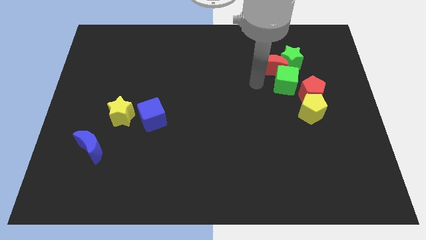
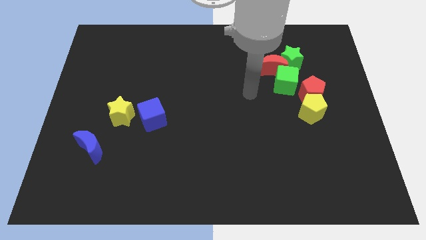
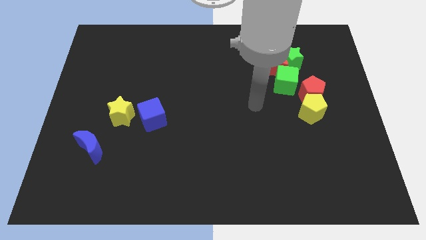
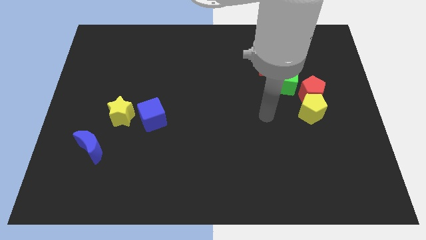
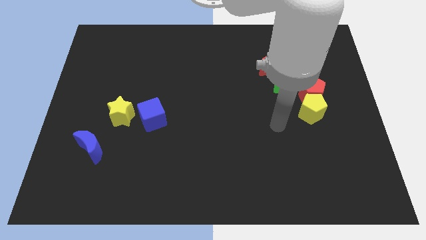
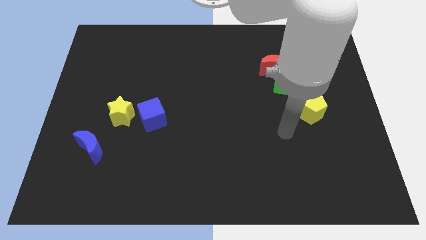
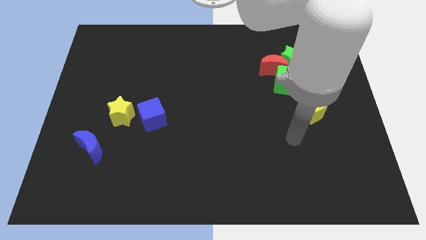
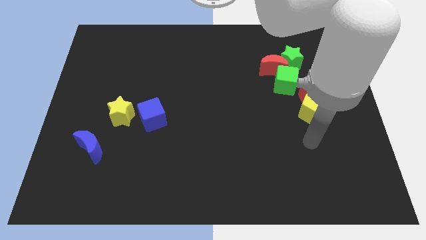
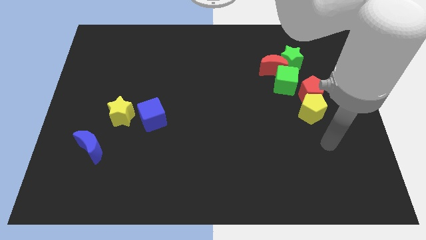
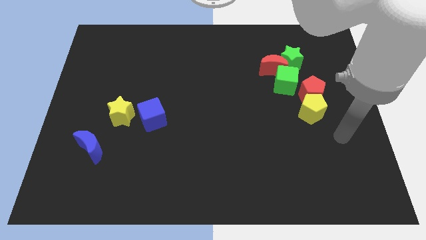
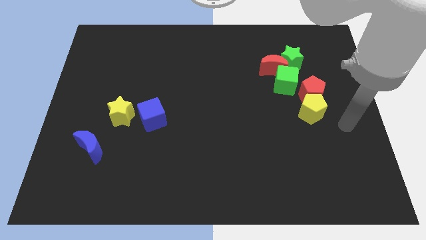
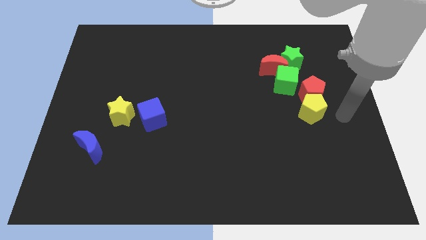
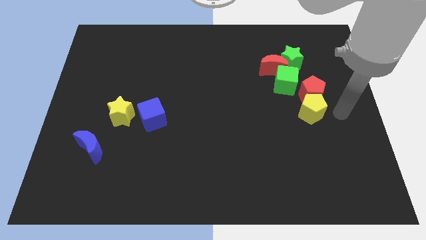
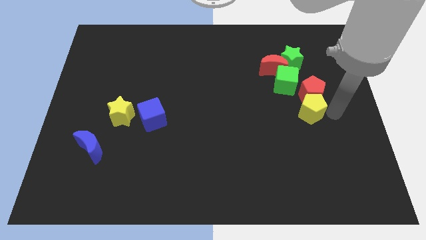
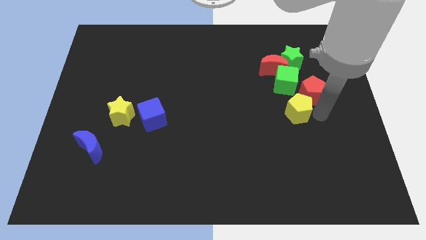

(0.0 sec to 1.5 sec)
place the arm to the right of the yellow pentagon

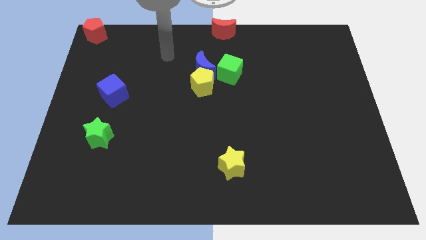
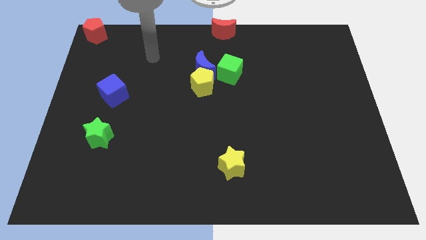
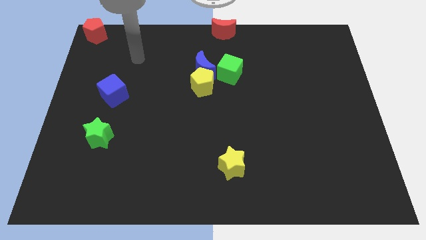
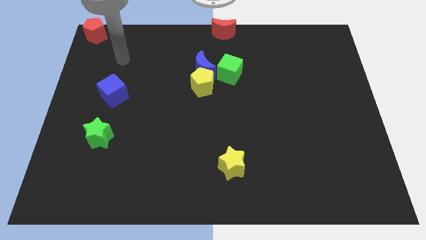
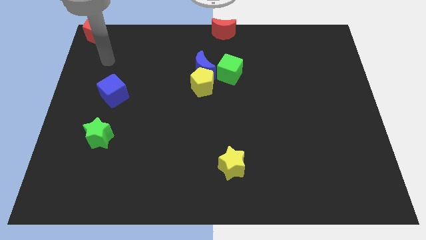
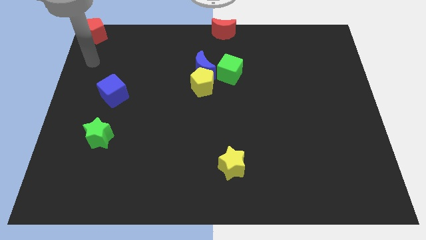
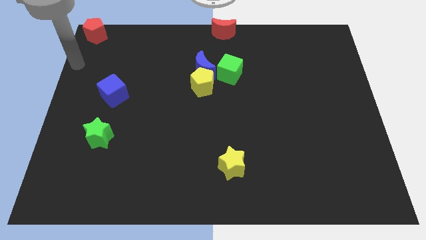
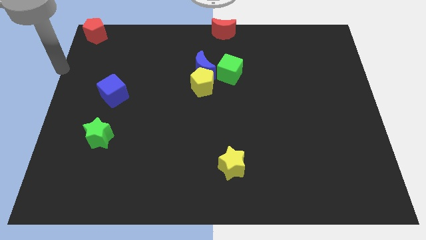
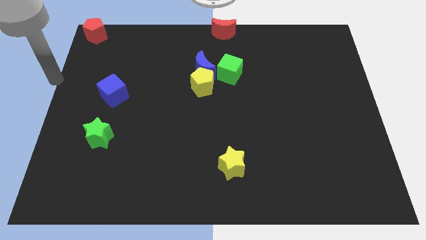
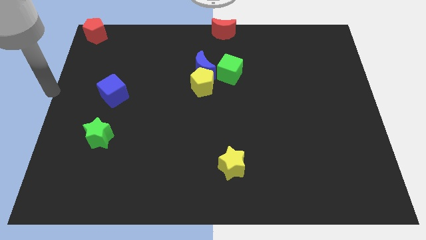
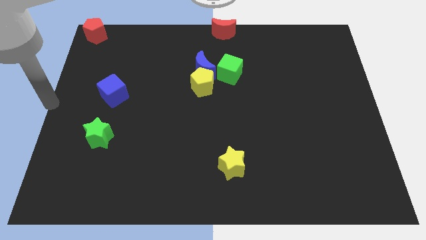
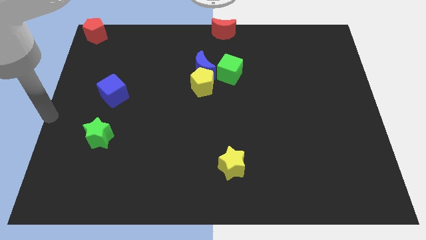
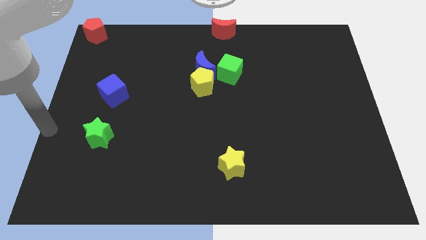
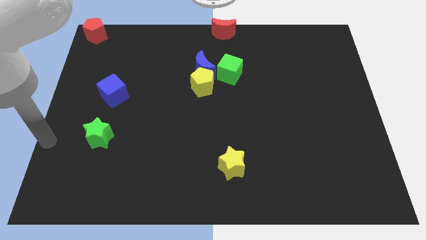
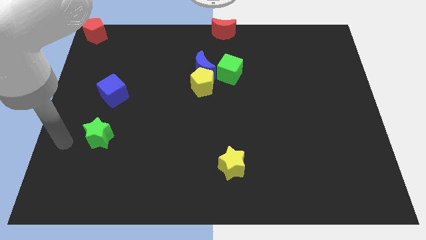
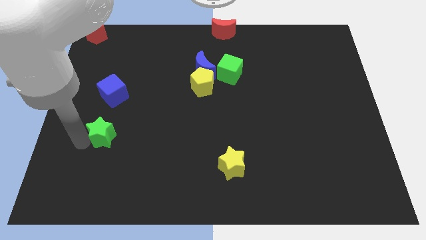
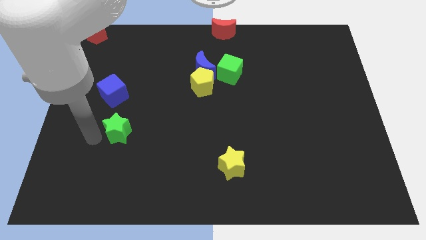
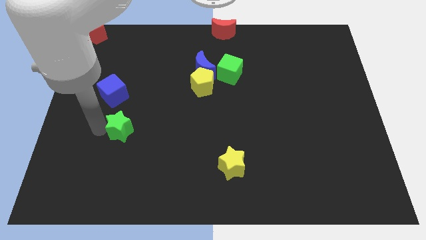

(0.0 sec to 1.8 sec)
put the green star below the blue cube

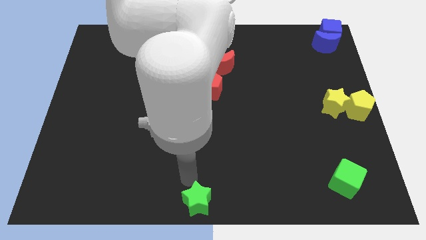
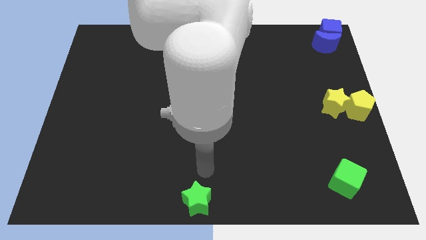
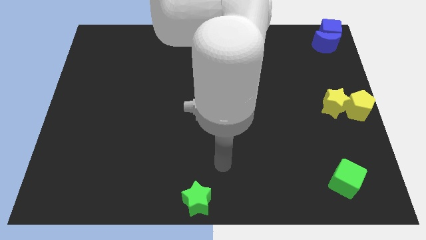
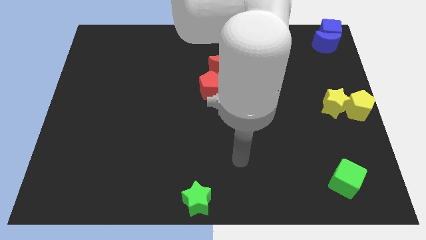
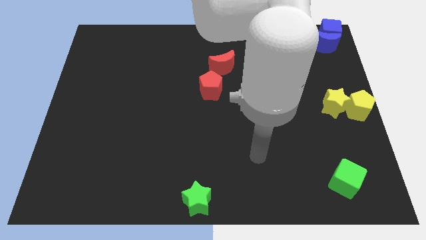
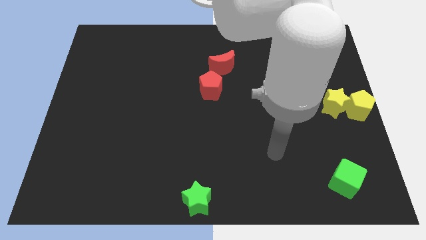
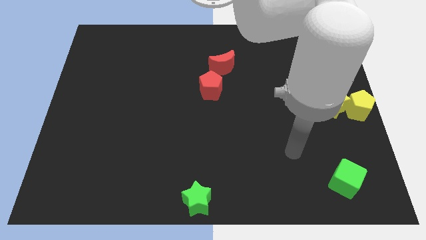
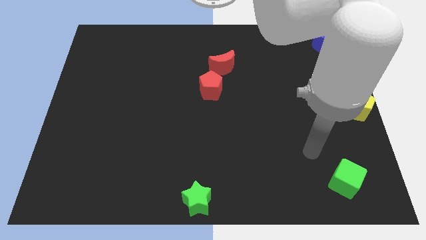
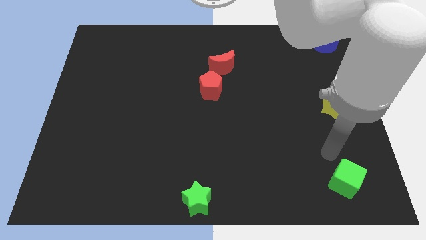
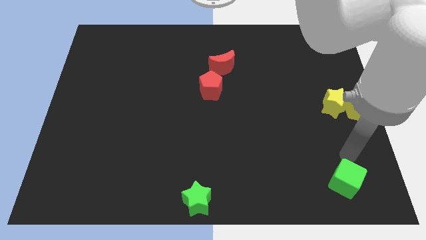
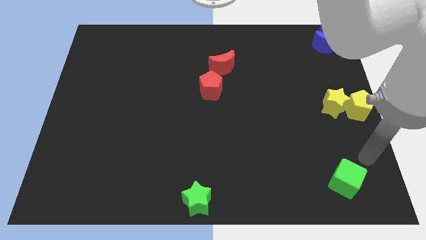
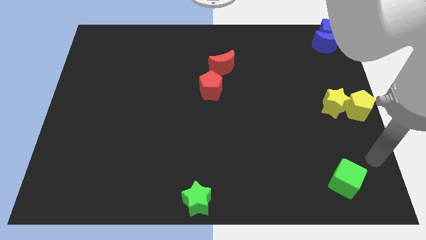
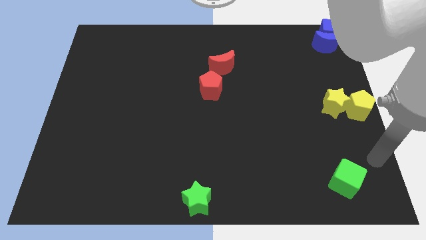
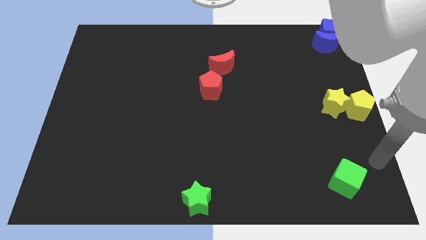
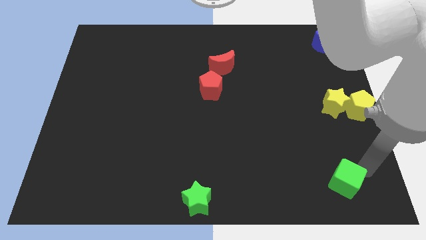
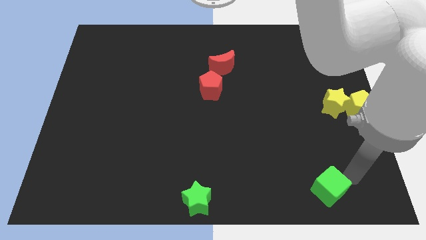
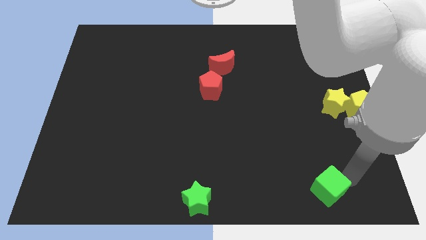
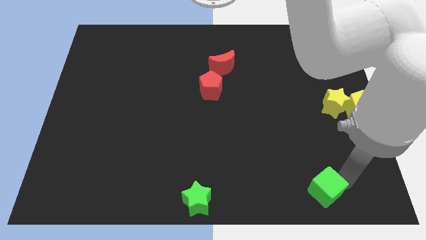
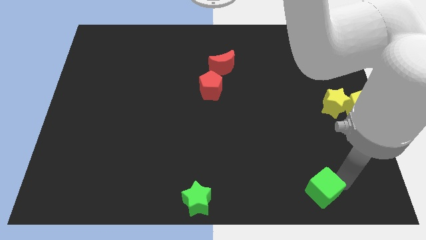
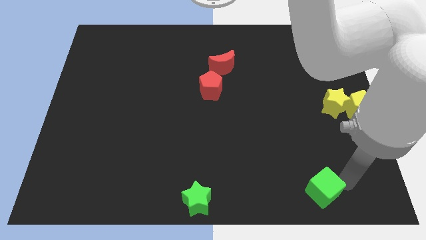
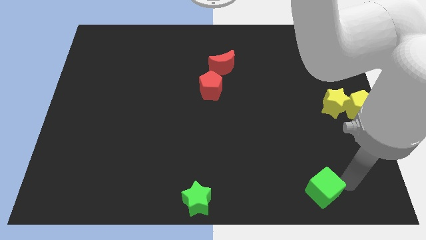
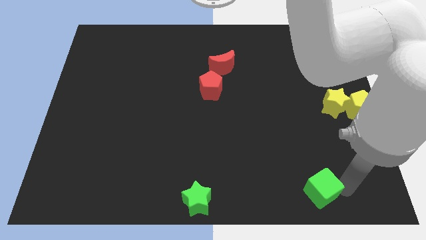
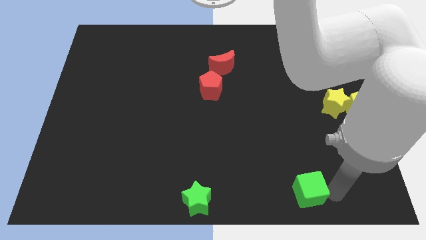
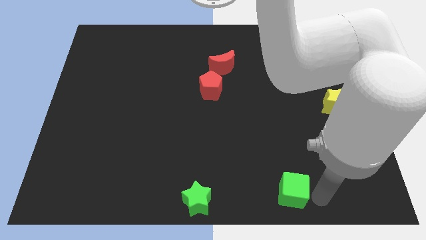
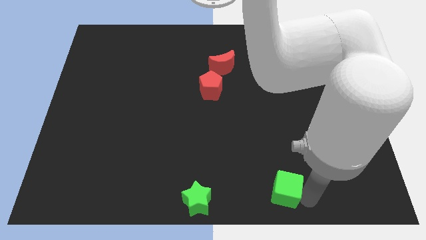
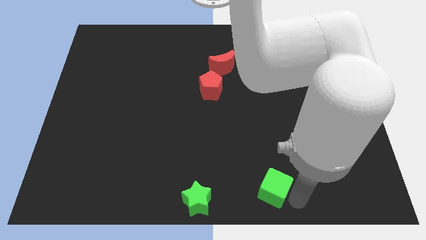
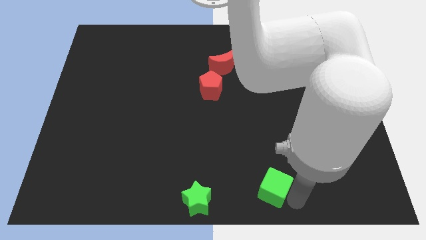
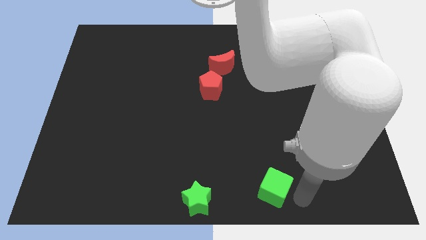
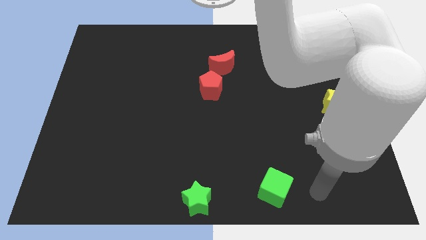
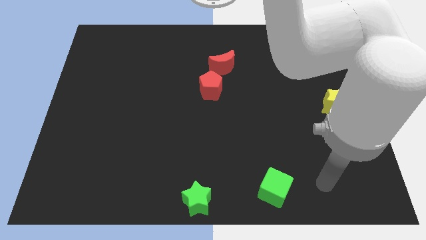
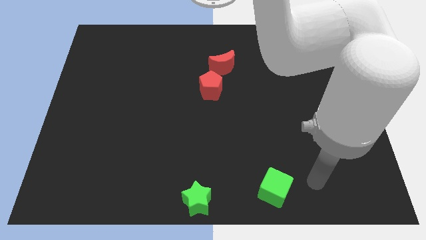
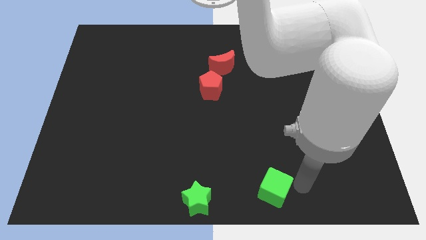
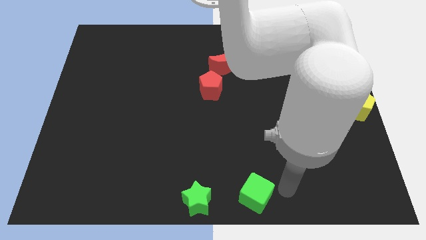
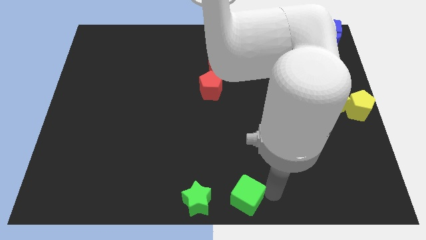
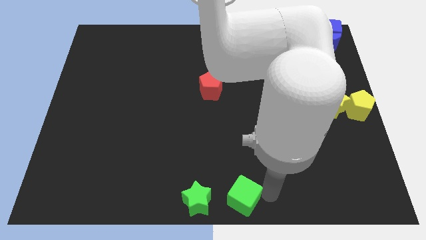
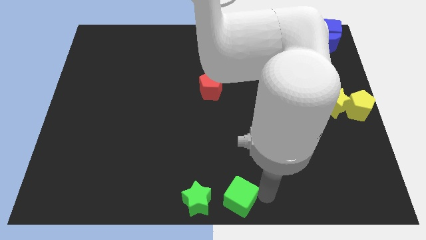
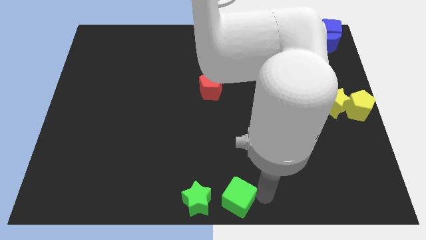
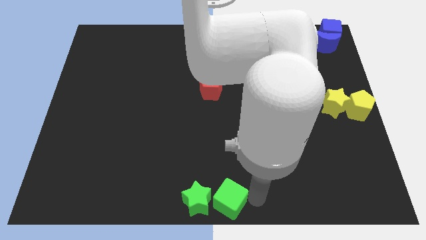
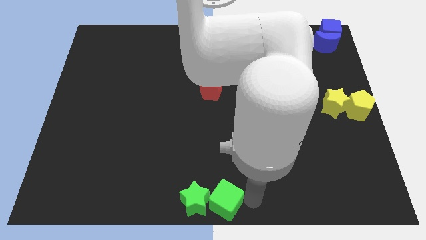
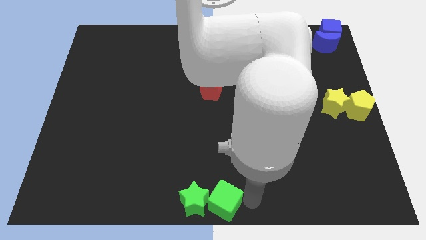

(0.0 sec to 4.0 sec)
move the green cube to the right of the green star

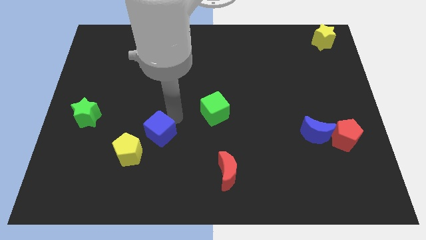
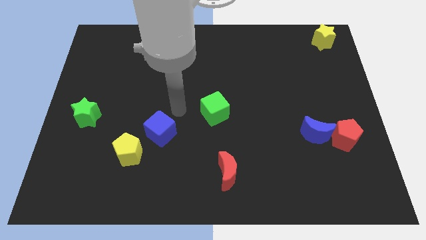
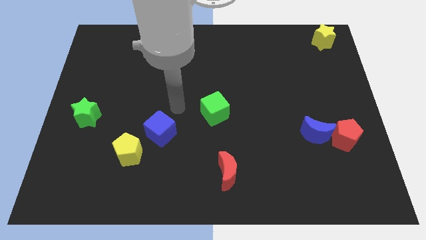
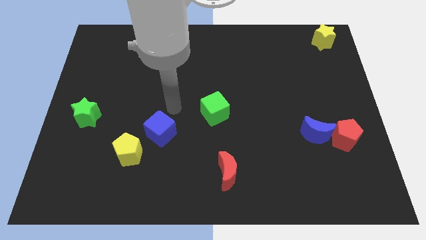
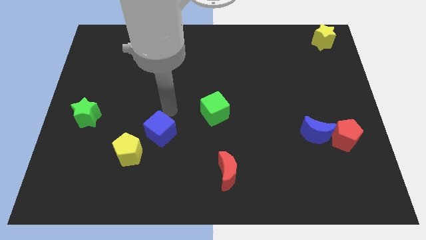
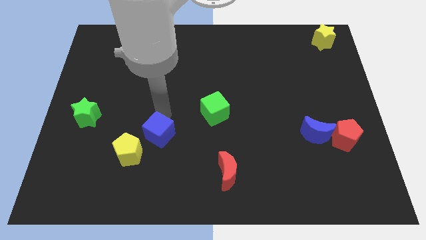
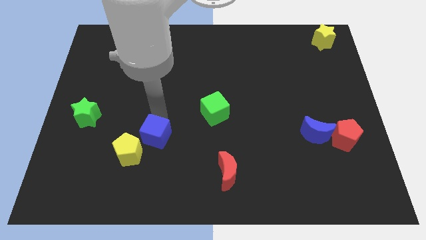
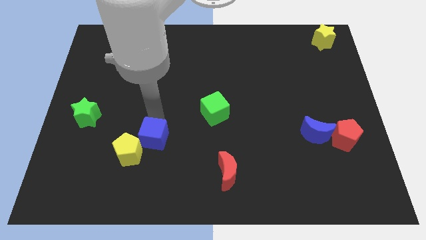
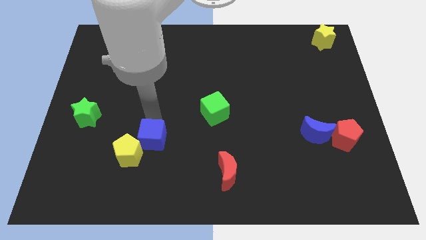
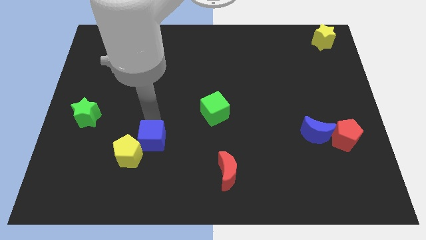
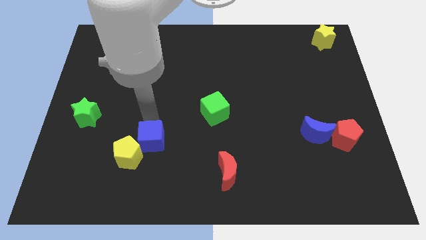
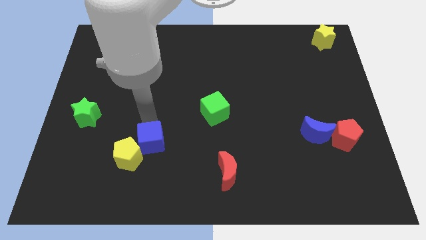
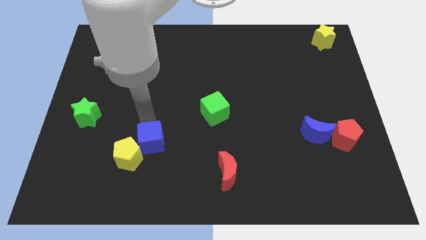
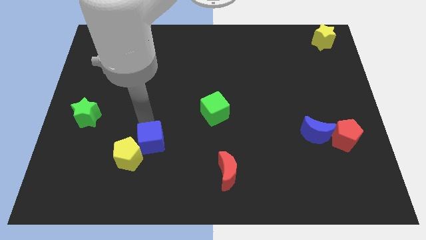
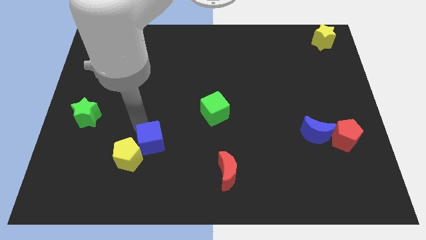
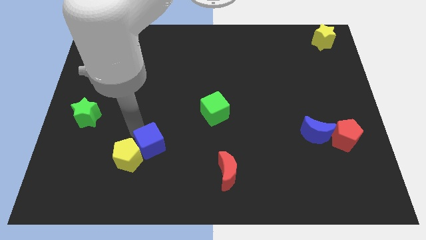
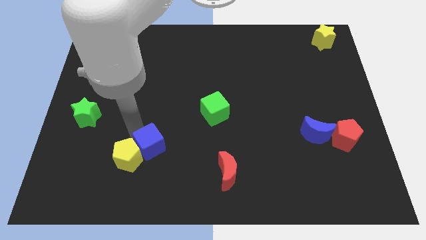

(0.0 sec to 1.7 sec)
push the blue cube into the yellow pentagon
